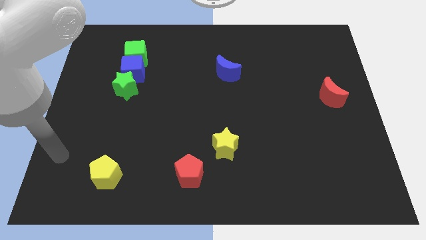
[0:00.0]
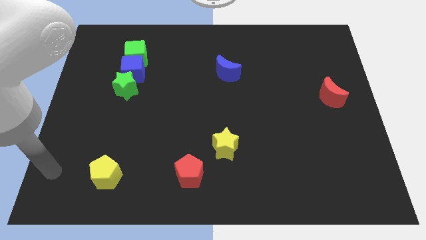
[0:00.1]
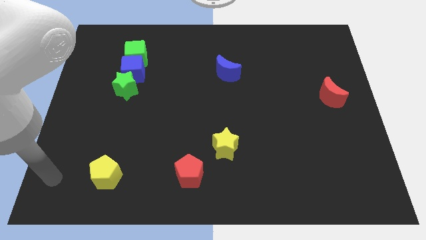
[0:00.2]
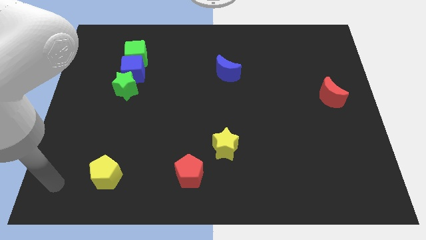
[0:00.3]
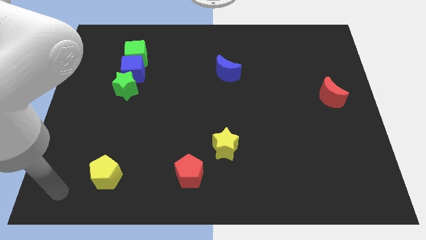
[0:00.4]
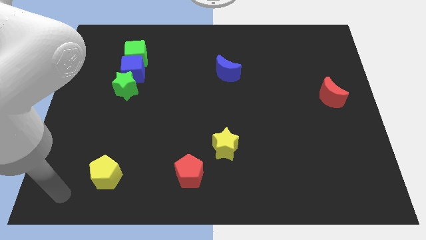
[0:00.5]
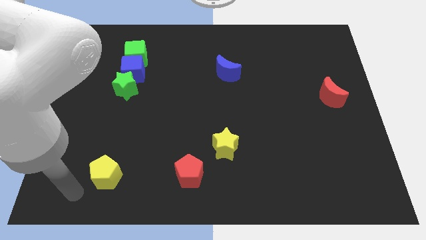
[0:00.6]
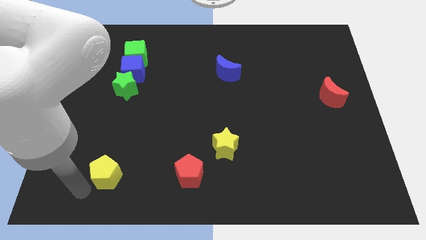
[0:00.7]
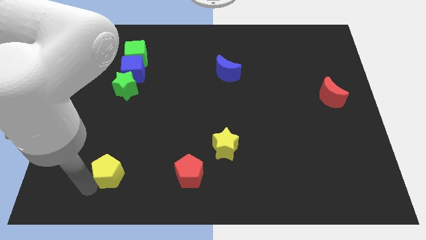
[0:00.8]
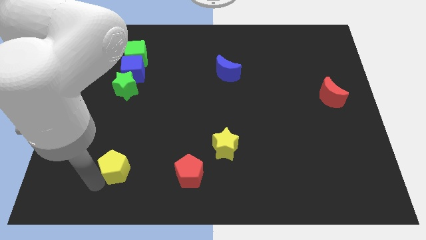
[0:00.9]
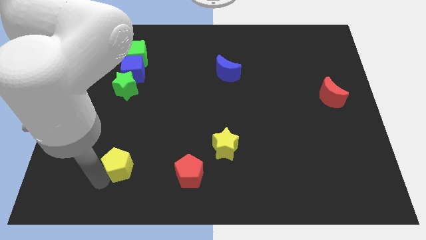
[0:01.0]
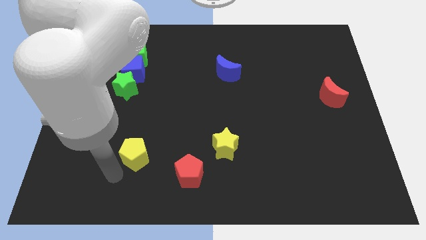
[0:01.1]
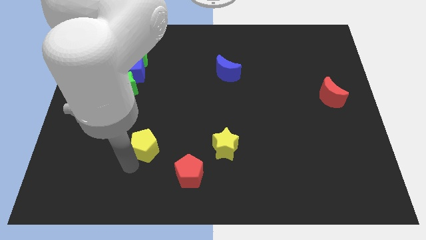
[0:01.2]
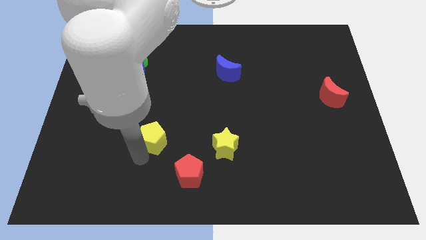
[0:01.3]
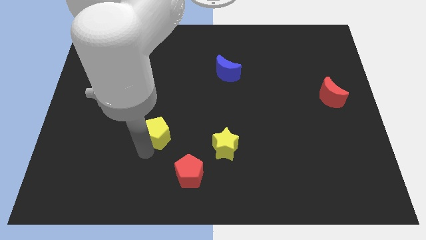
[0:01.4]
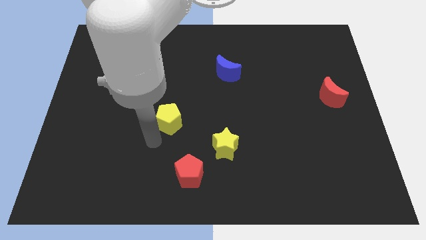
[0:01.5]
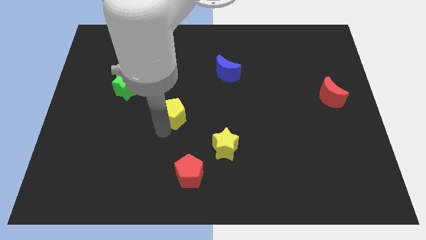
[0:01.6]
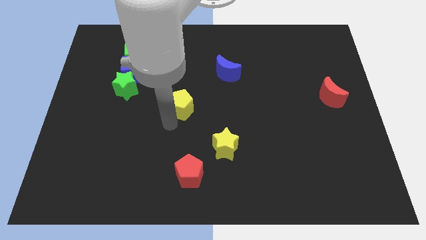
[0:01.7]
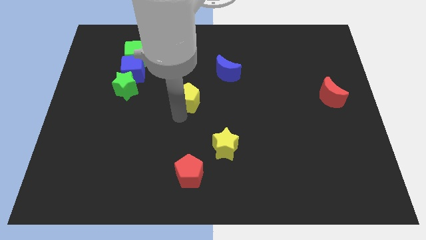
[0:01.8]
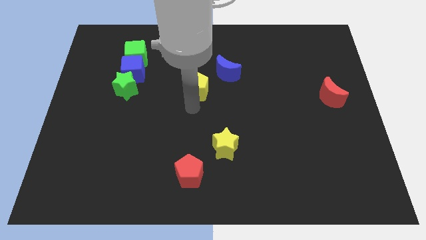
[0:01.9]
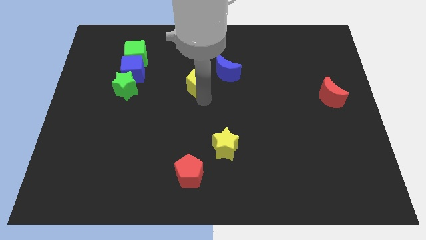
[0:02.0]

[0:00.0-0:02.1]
place the yellow pentagon to the right of the green star

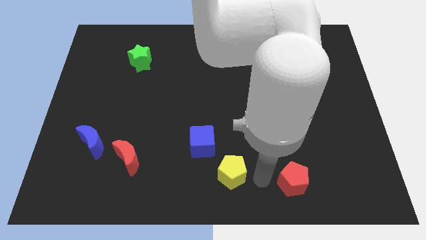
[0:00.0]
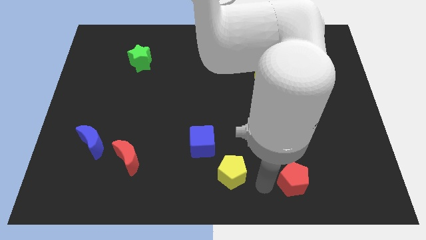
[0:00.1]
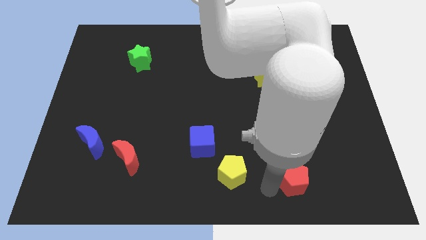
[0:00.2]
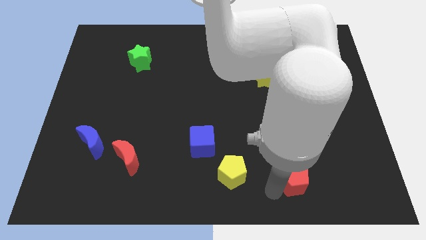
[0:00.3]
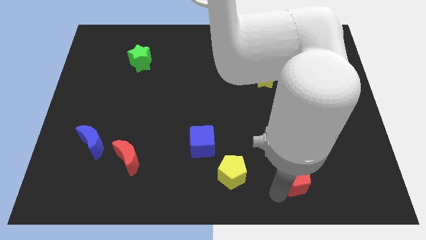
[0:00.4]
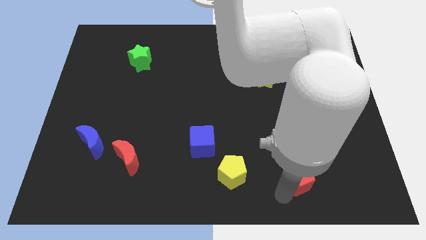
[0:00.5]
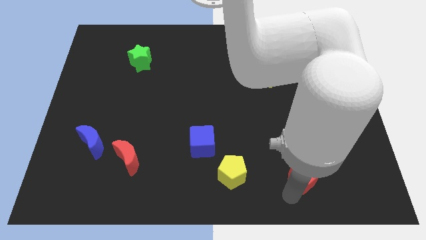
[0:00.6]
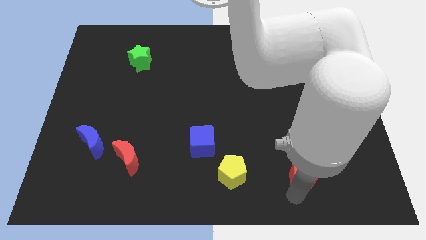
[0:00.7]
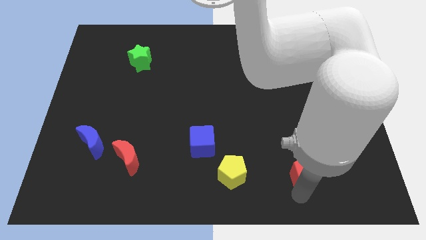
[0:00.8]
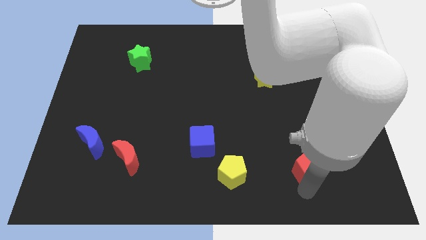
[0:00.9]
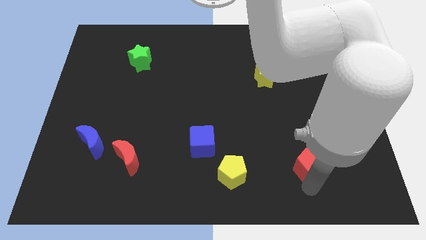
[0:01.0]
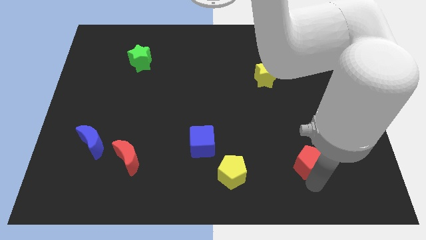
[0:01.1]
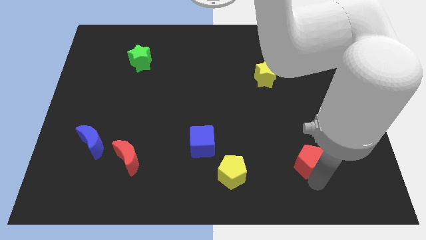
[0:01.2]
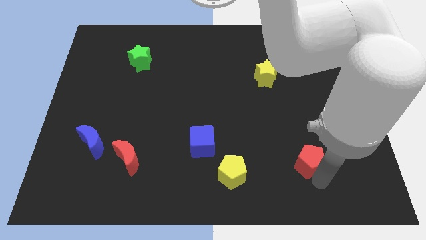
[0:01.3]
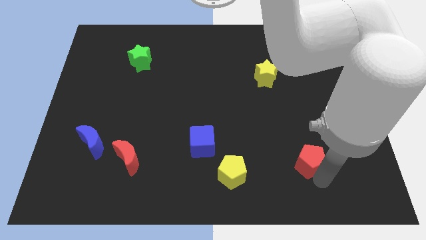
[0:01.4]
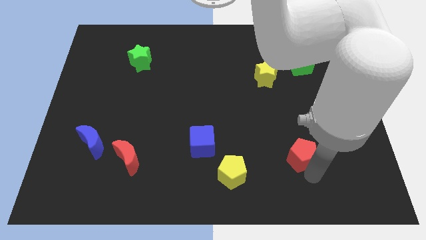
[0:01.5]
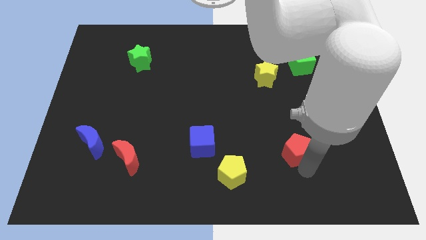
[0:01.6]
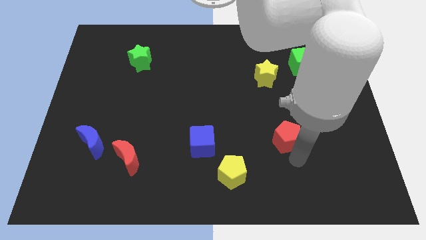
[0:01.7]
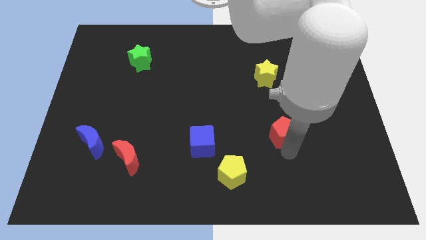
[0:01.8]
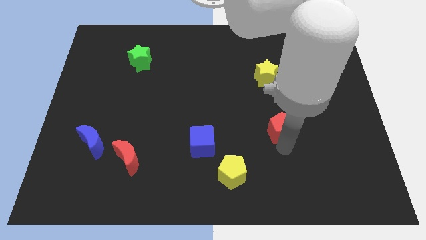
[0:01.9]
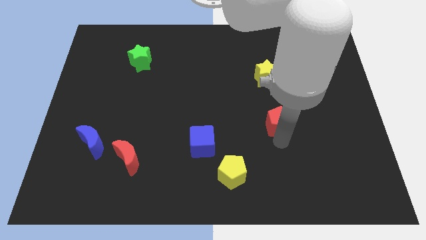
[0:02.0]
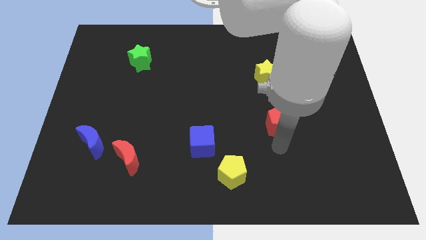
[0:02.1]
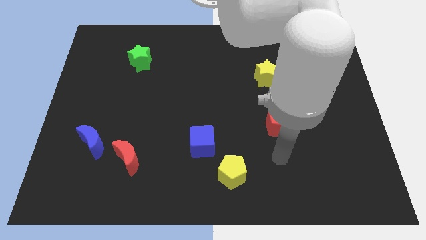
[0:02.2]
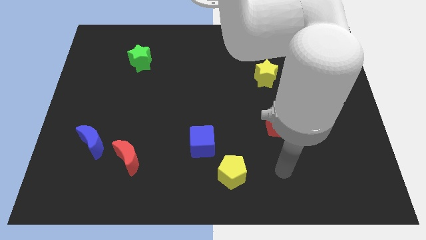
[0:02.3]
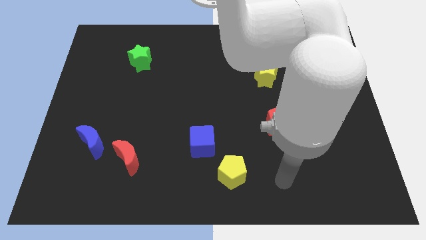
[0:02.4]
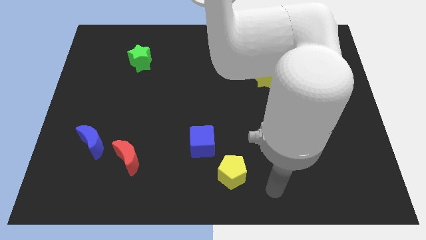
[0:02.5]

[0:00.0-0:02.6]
move the red pentagon towards yellow star

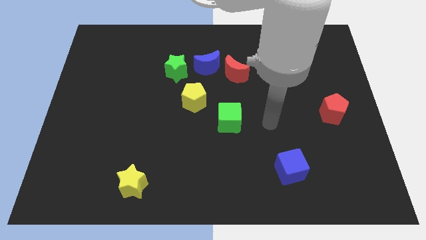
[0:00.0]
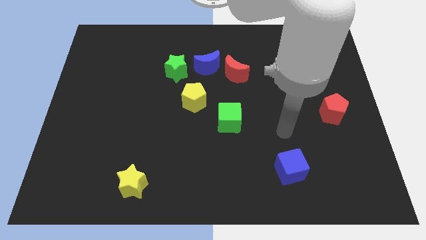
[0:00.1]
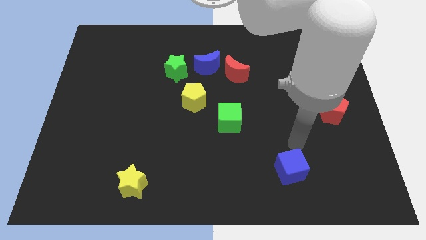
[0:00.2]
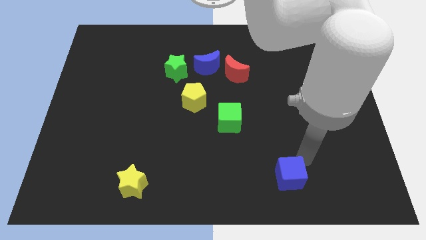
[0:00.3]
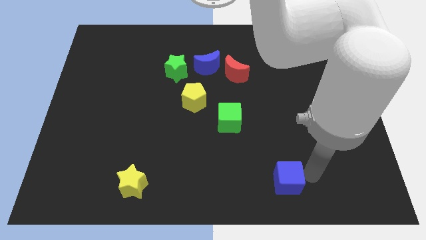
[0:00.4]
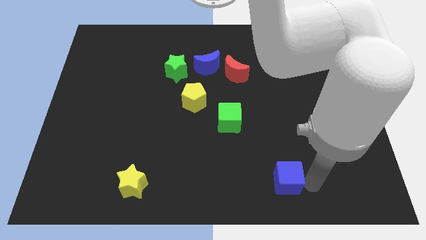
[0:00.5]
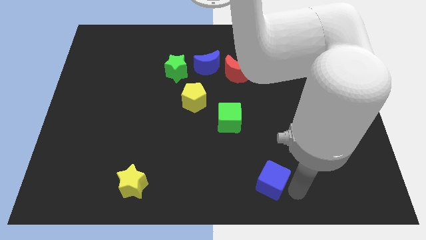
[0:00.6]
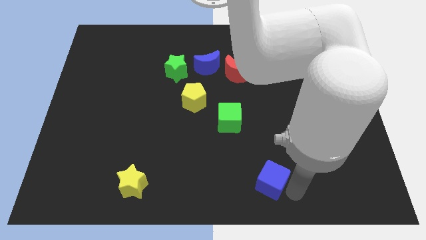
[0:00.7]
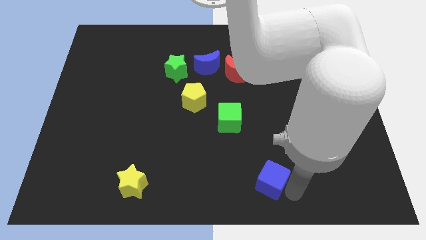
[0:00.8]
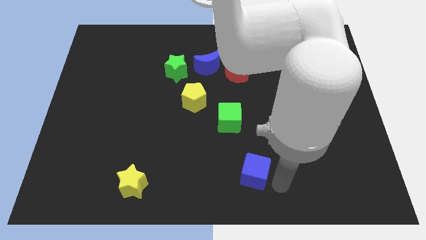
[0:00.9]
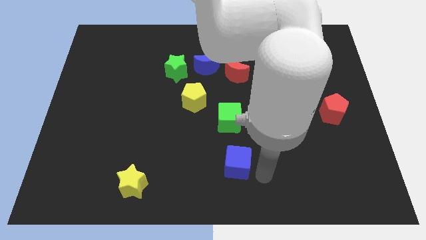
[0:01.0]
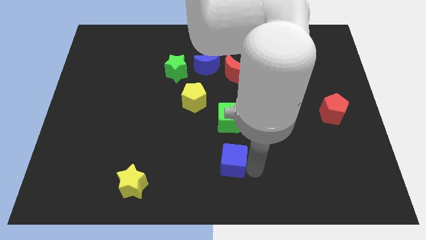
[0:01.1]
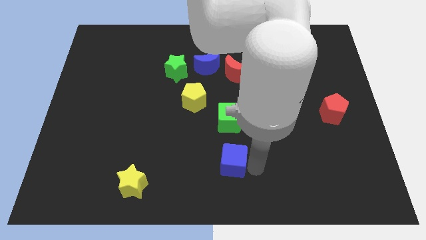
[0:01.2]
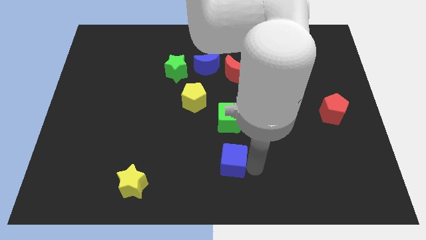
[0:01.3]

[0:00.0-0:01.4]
place the blue cube to the bottom of the green cube

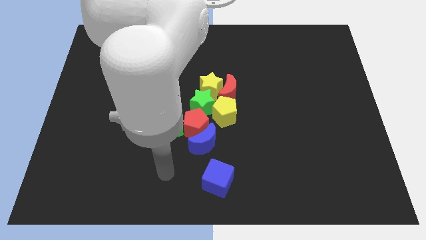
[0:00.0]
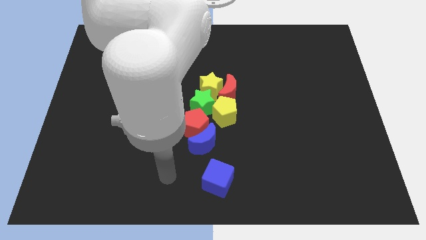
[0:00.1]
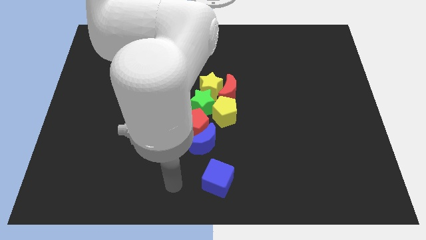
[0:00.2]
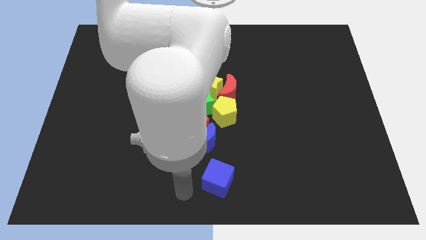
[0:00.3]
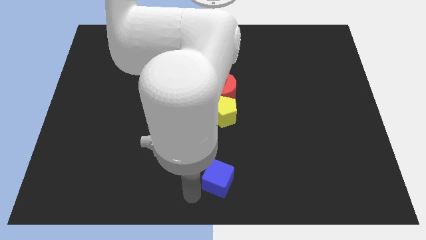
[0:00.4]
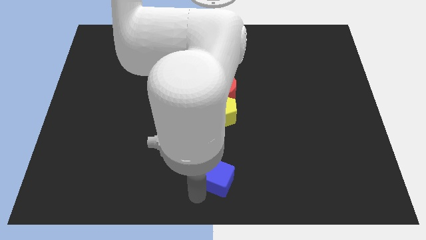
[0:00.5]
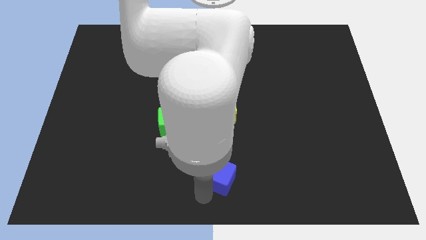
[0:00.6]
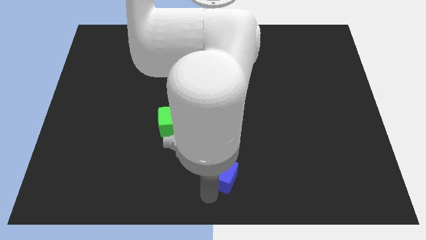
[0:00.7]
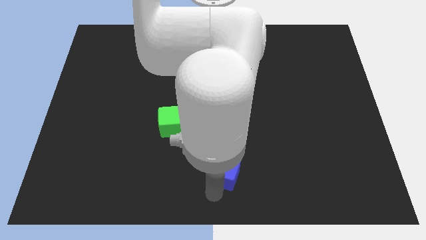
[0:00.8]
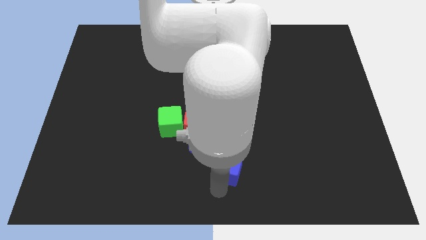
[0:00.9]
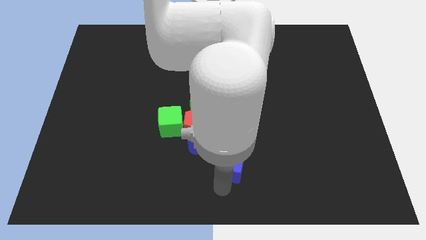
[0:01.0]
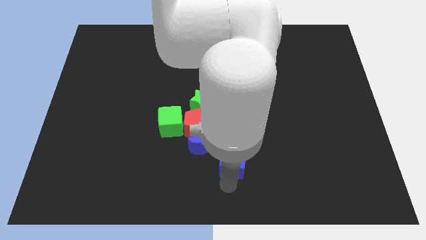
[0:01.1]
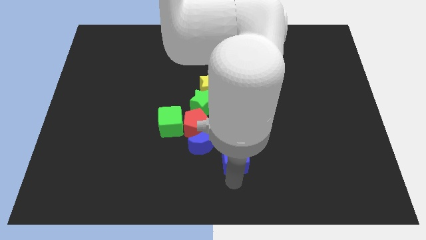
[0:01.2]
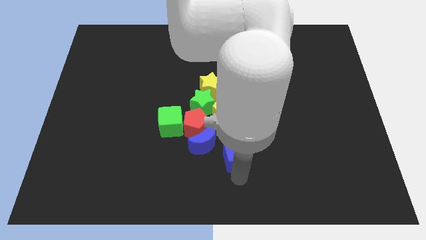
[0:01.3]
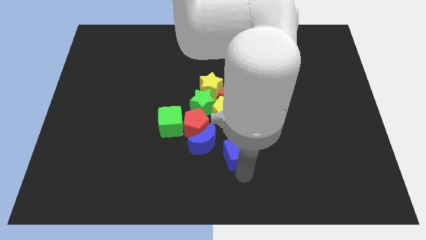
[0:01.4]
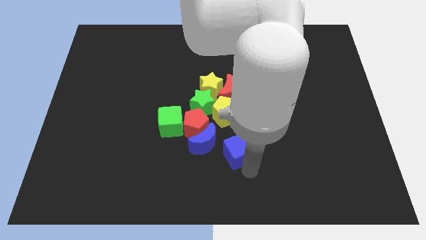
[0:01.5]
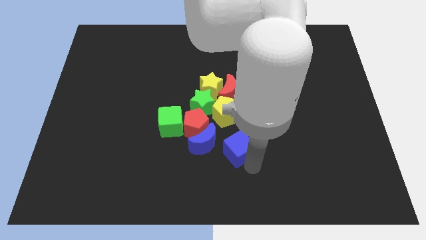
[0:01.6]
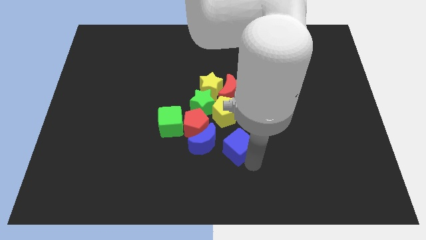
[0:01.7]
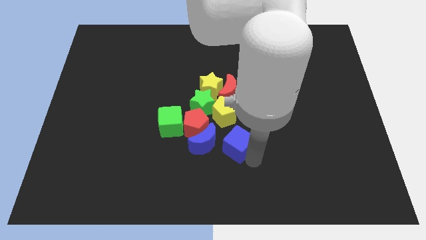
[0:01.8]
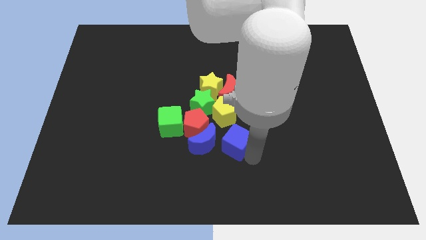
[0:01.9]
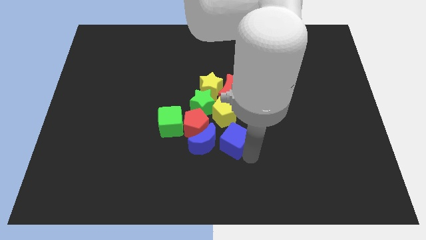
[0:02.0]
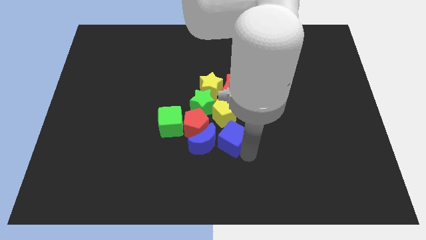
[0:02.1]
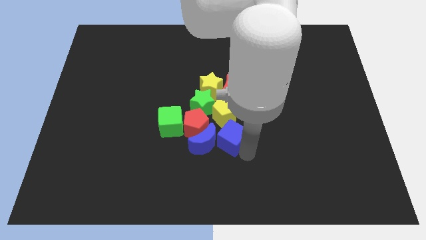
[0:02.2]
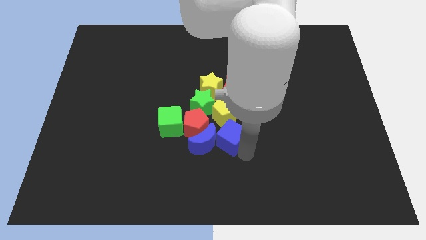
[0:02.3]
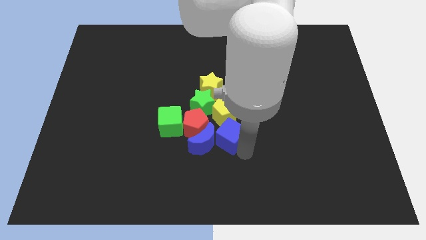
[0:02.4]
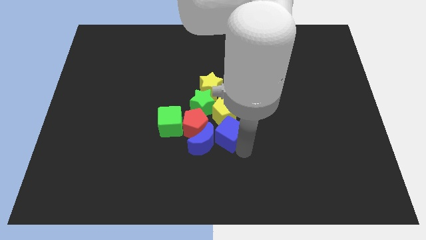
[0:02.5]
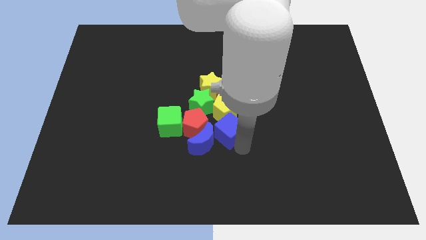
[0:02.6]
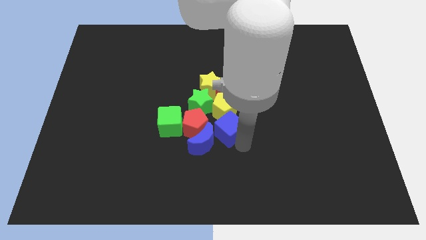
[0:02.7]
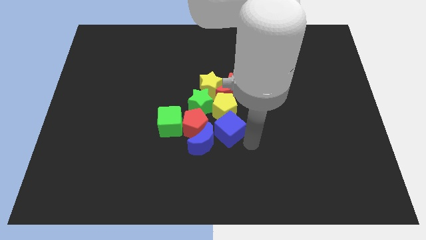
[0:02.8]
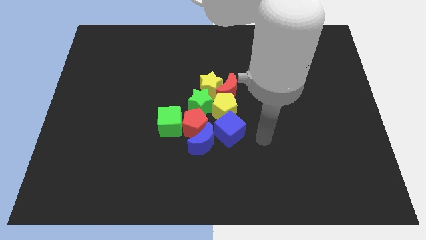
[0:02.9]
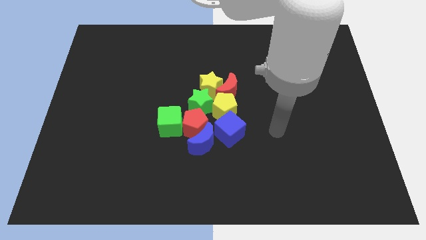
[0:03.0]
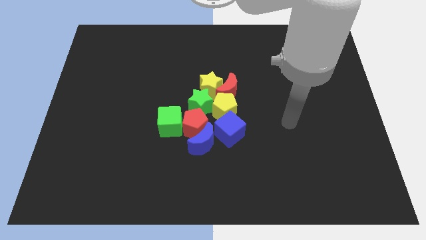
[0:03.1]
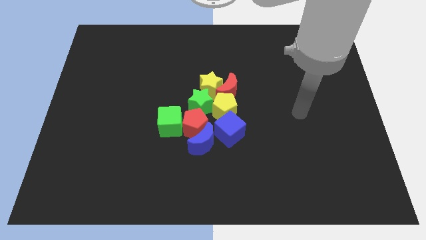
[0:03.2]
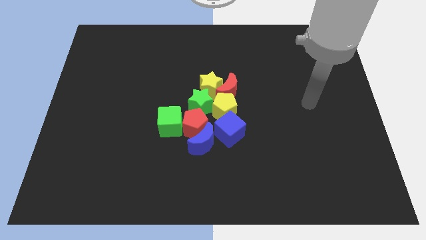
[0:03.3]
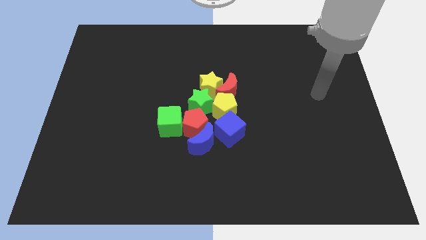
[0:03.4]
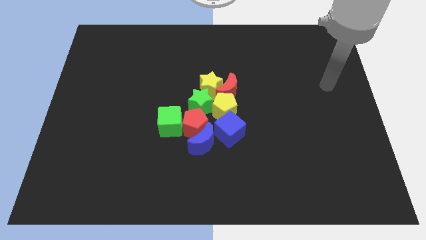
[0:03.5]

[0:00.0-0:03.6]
push the blue cube into the group of blocks
